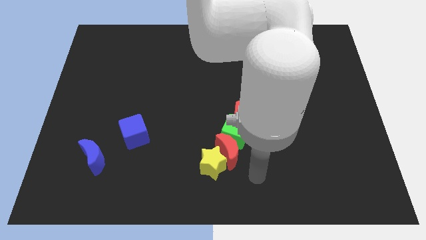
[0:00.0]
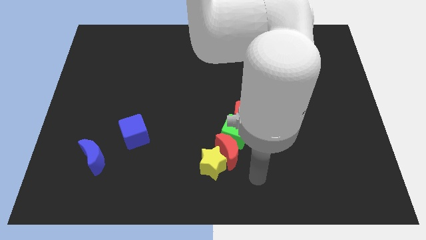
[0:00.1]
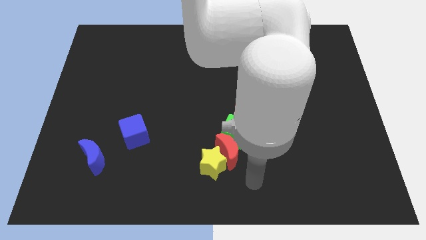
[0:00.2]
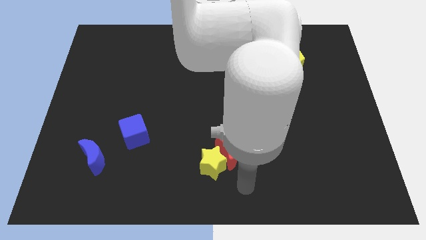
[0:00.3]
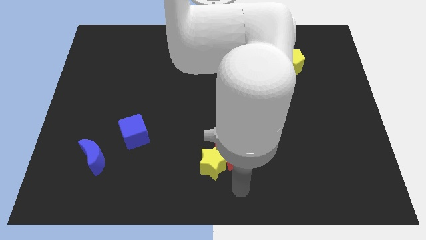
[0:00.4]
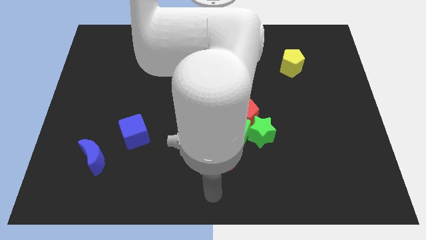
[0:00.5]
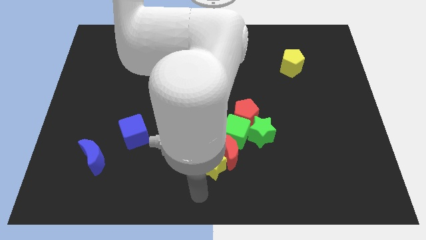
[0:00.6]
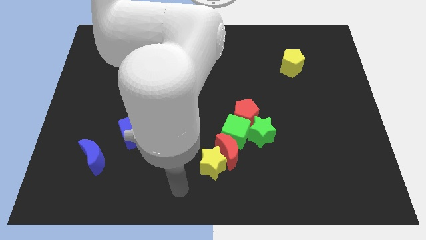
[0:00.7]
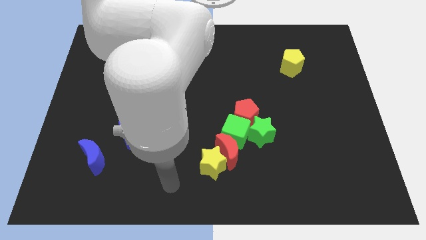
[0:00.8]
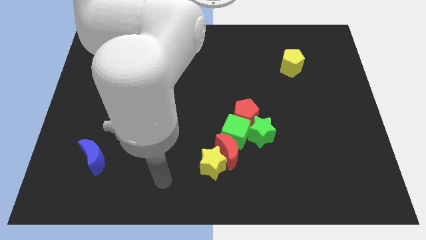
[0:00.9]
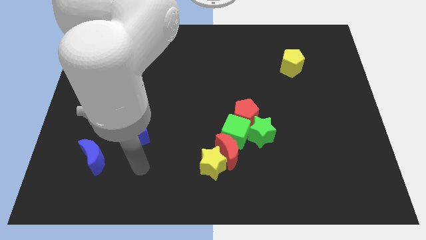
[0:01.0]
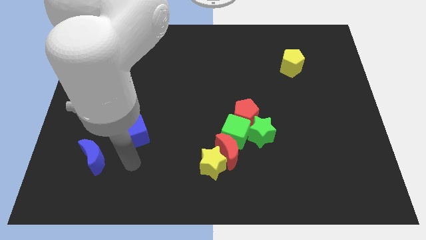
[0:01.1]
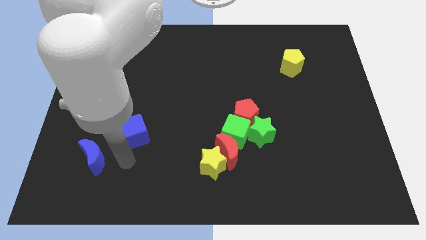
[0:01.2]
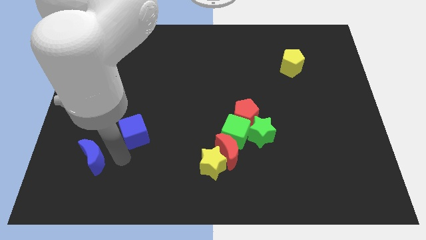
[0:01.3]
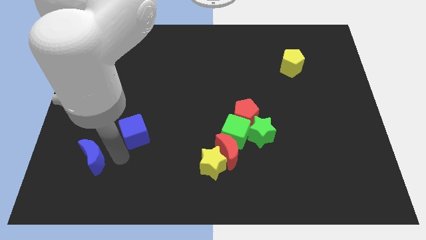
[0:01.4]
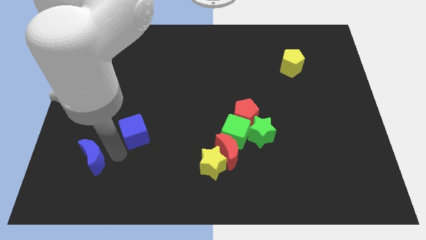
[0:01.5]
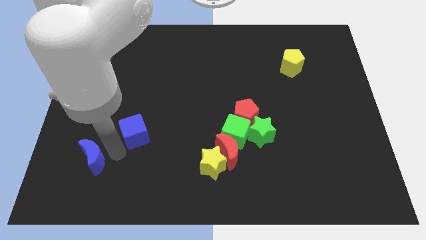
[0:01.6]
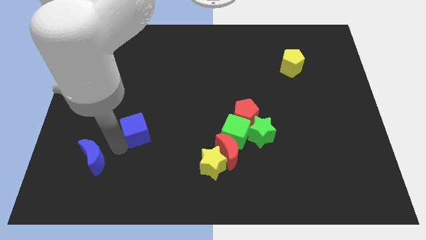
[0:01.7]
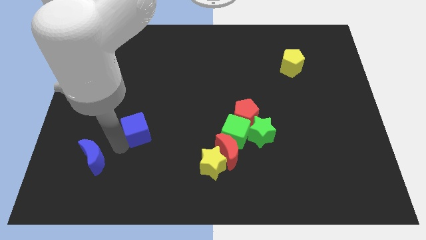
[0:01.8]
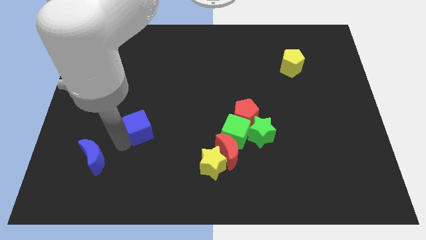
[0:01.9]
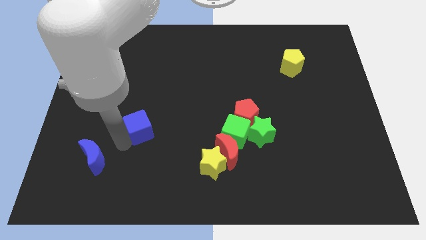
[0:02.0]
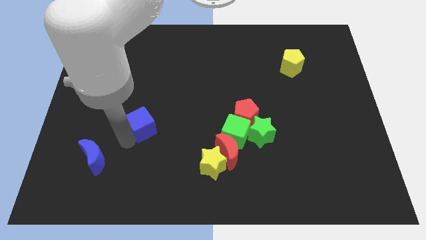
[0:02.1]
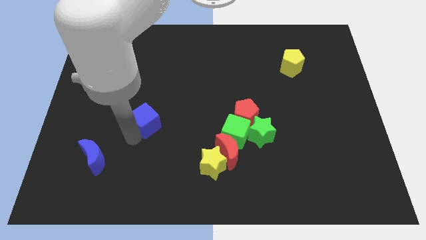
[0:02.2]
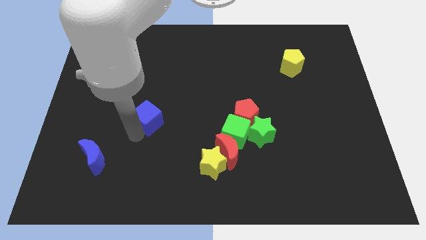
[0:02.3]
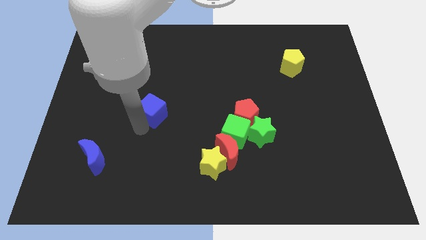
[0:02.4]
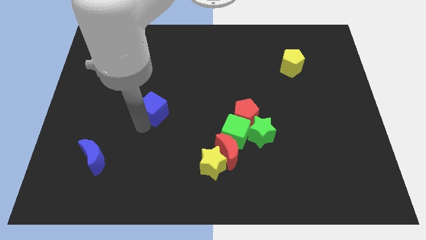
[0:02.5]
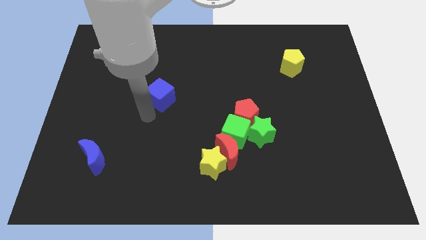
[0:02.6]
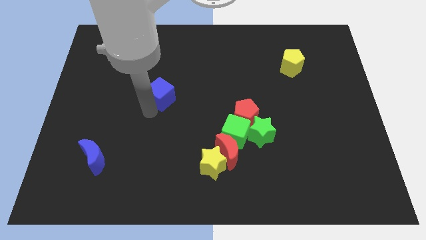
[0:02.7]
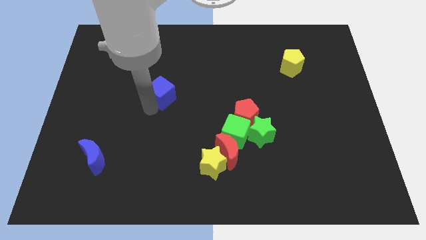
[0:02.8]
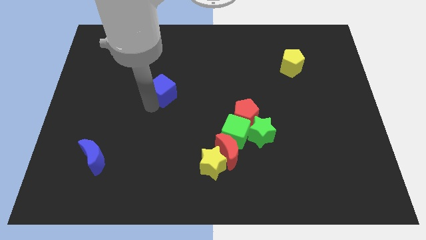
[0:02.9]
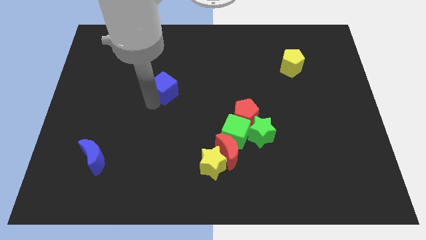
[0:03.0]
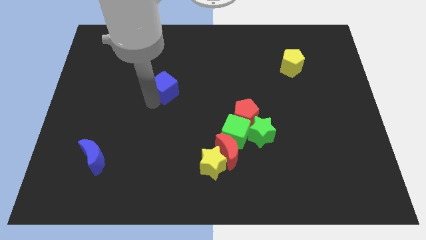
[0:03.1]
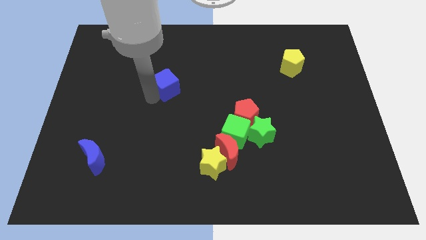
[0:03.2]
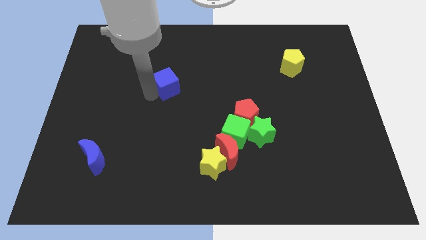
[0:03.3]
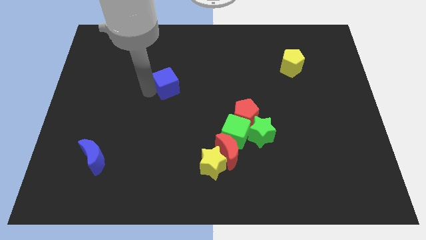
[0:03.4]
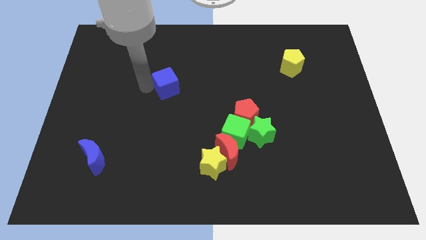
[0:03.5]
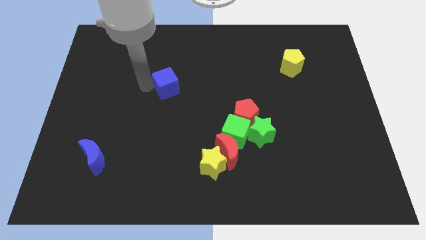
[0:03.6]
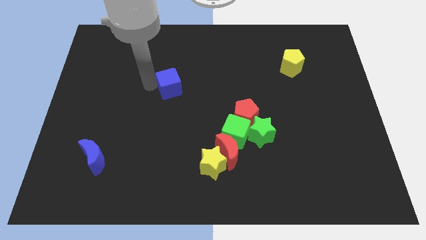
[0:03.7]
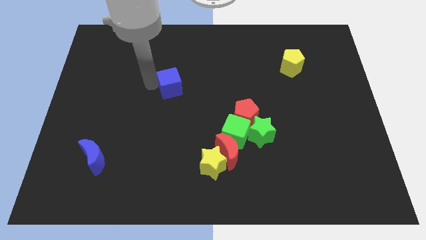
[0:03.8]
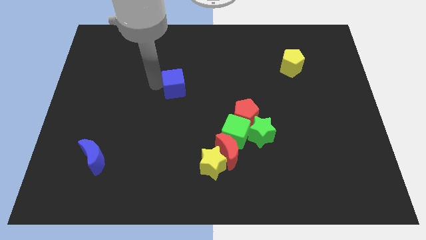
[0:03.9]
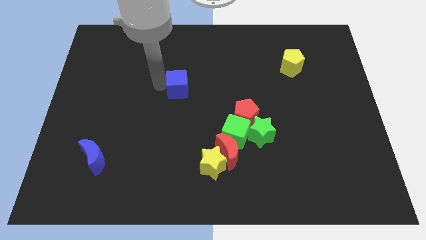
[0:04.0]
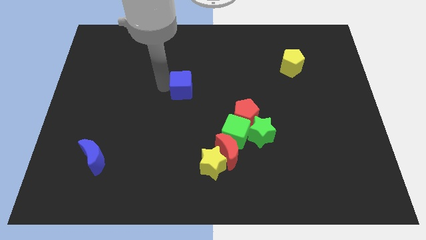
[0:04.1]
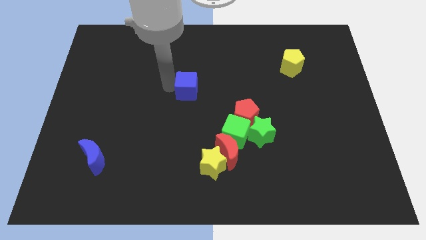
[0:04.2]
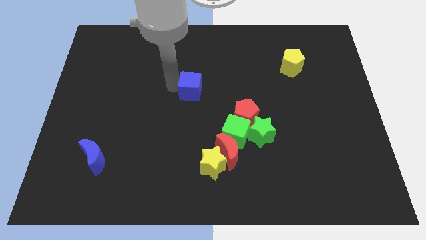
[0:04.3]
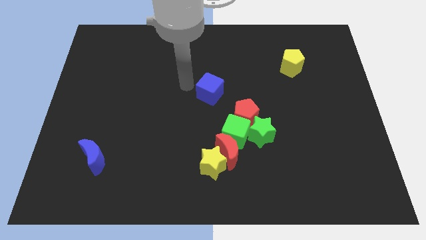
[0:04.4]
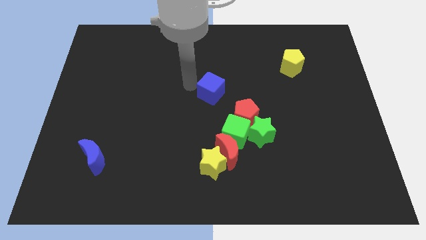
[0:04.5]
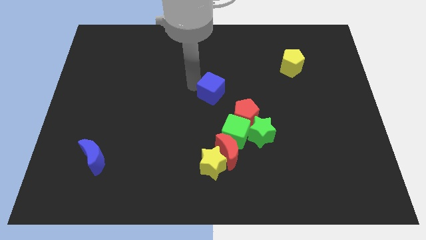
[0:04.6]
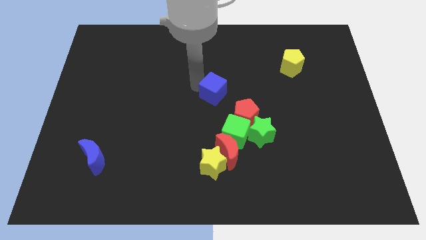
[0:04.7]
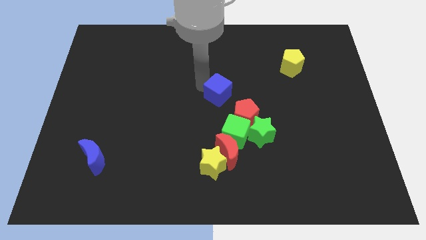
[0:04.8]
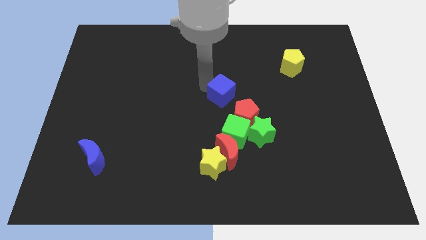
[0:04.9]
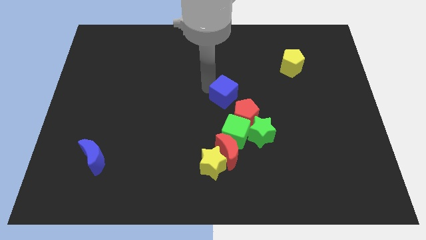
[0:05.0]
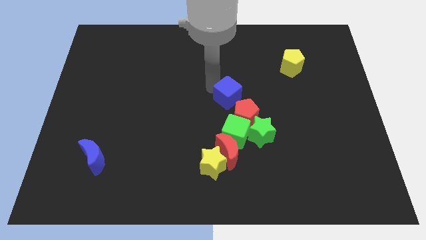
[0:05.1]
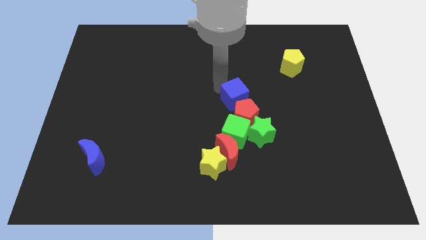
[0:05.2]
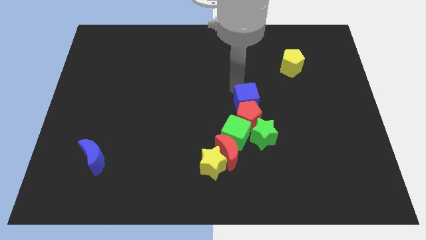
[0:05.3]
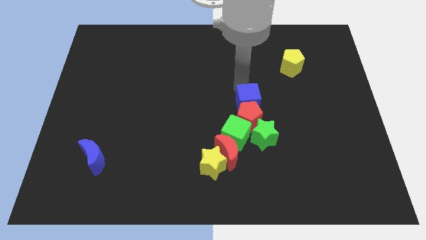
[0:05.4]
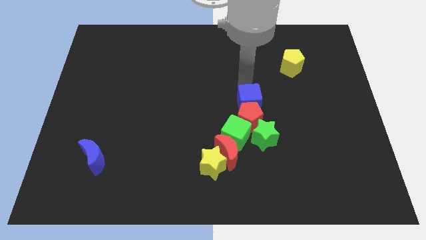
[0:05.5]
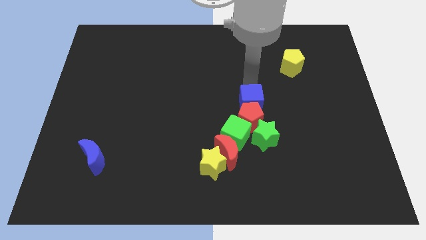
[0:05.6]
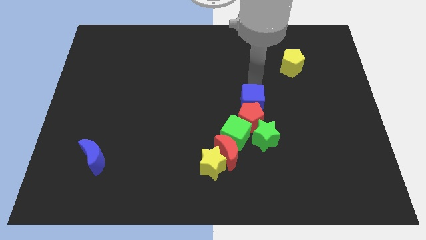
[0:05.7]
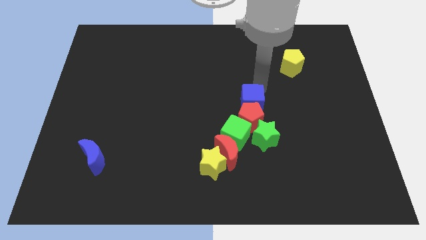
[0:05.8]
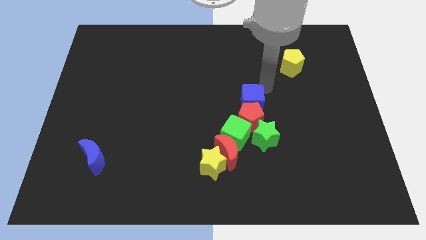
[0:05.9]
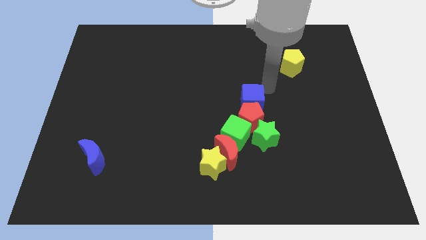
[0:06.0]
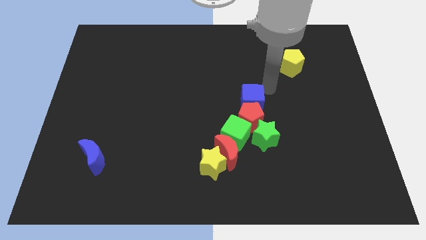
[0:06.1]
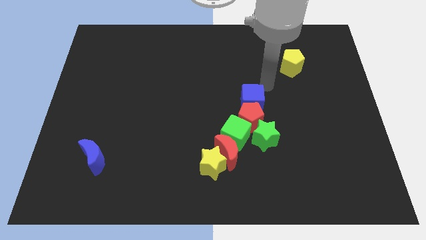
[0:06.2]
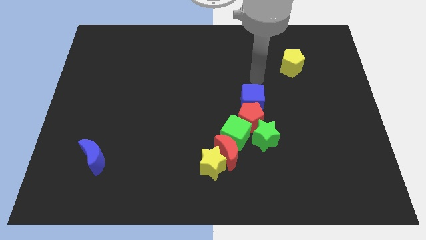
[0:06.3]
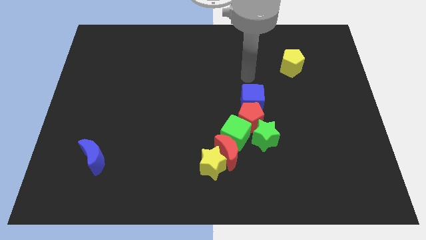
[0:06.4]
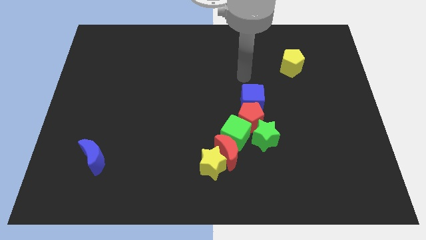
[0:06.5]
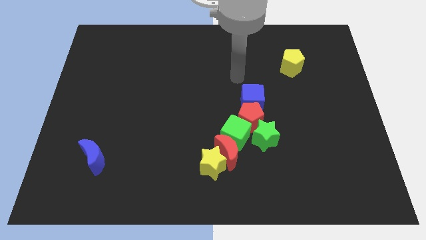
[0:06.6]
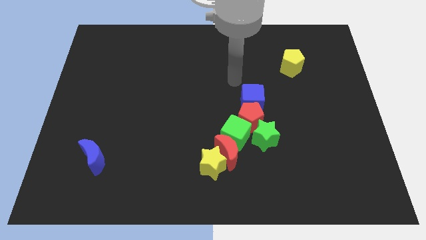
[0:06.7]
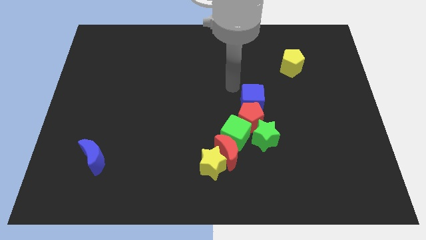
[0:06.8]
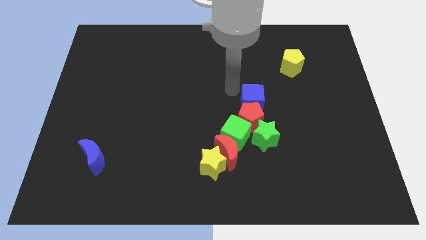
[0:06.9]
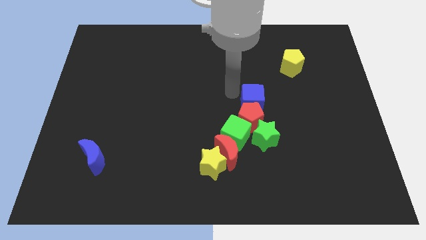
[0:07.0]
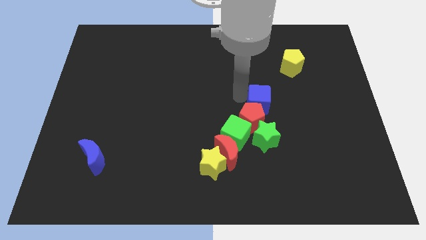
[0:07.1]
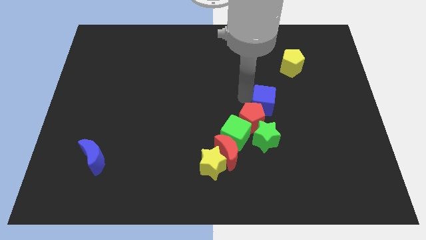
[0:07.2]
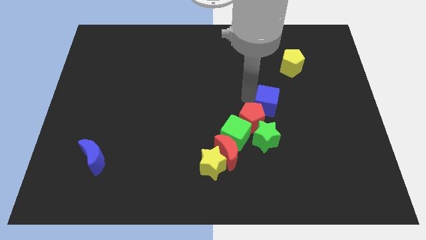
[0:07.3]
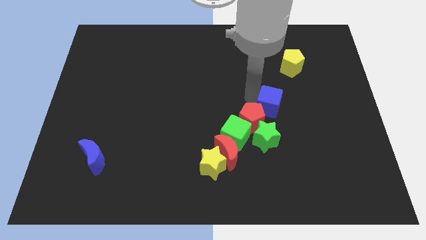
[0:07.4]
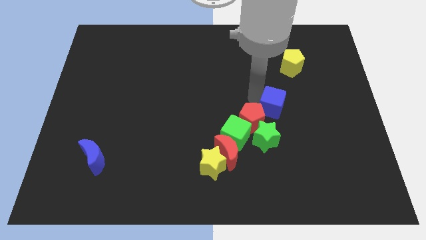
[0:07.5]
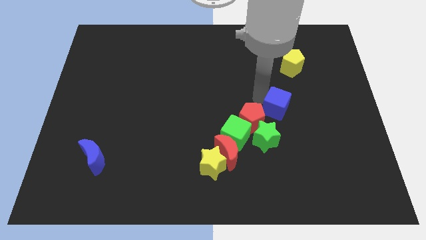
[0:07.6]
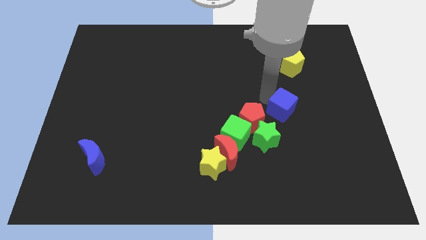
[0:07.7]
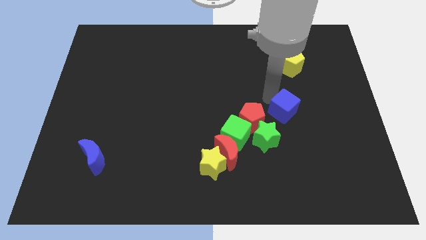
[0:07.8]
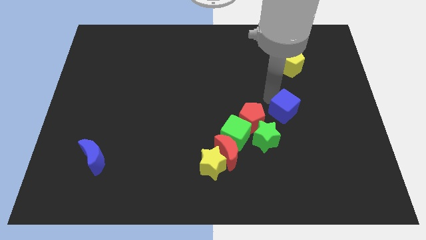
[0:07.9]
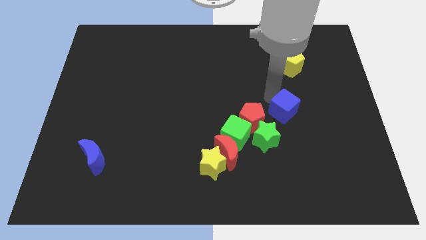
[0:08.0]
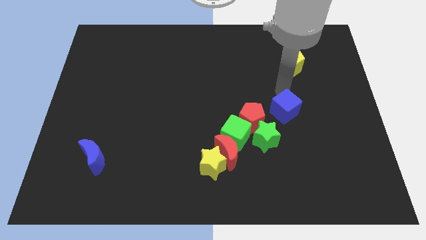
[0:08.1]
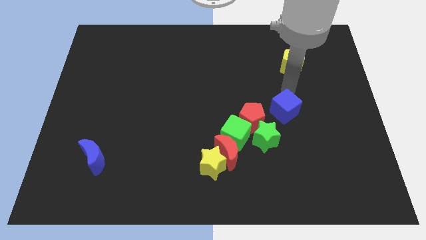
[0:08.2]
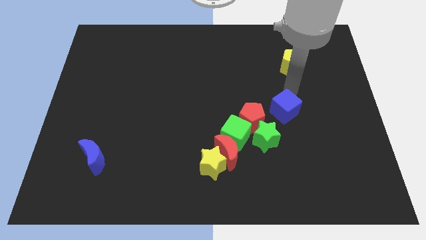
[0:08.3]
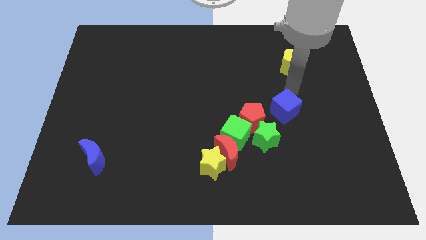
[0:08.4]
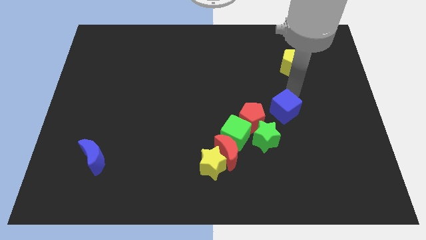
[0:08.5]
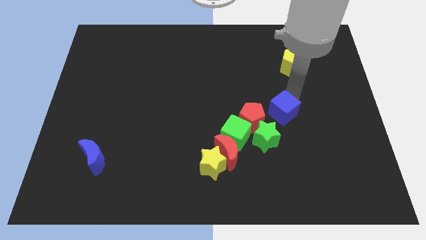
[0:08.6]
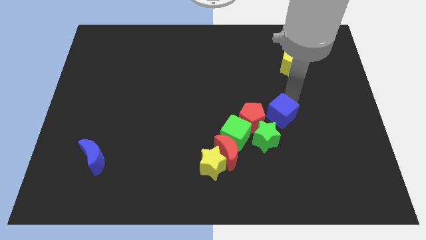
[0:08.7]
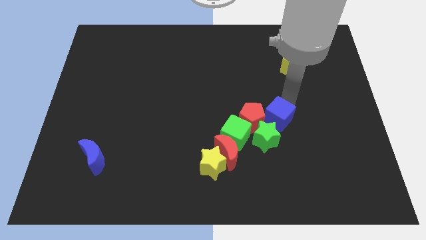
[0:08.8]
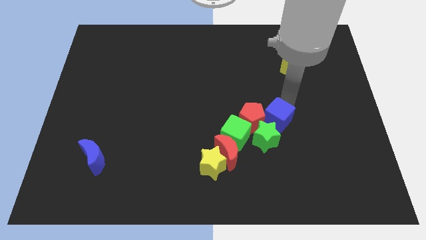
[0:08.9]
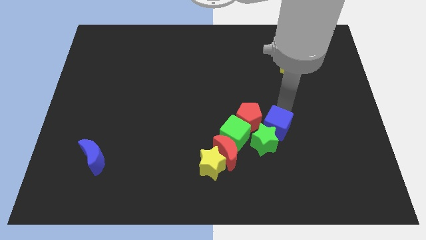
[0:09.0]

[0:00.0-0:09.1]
slide the blue cube towards the green star
